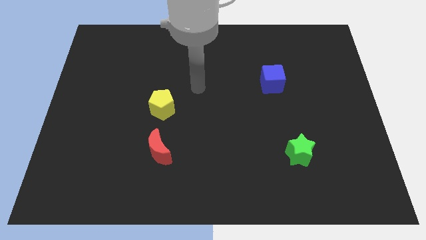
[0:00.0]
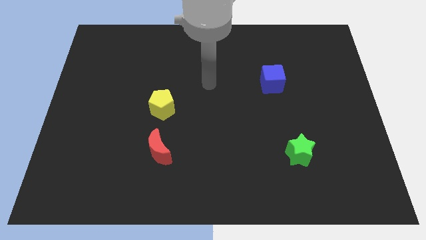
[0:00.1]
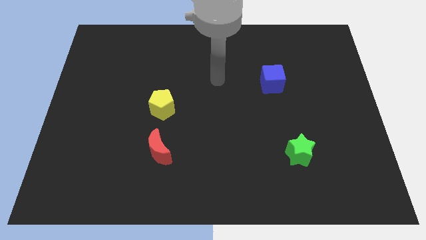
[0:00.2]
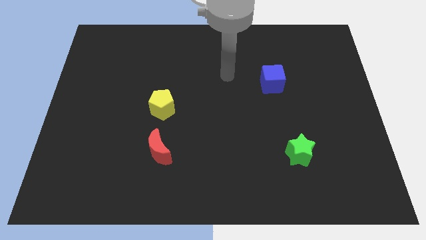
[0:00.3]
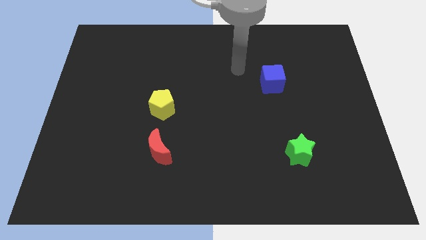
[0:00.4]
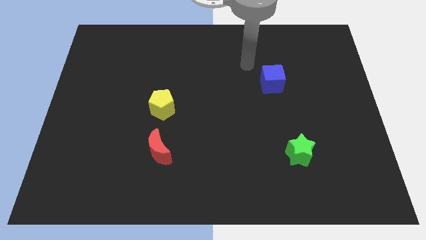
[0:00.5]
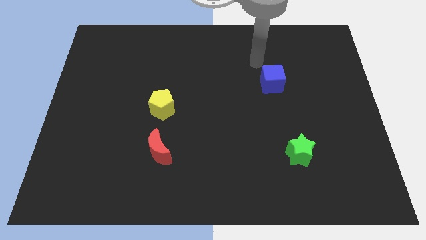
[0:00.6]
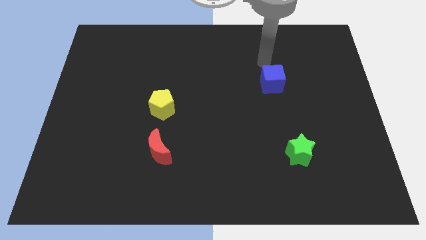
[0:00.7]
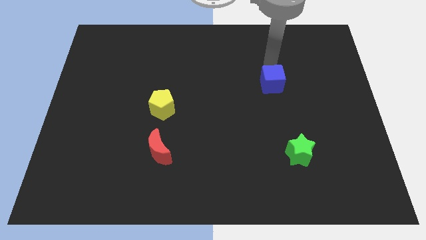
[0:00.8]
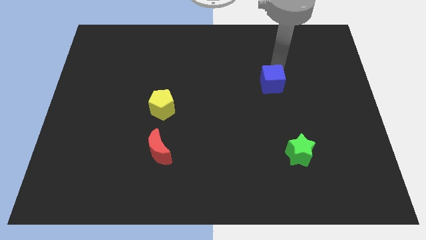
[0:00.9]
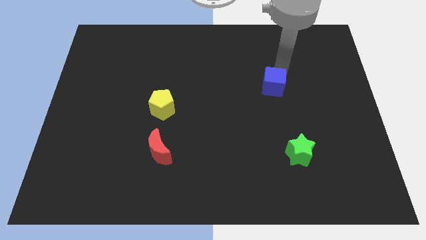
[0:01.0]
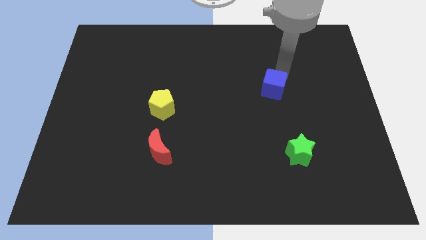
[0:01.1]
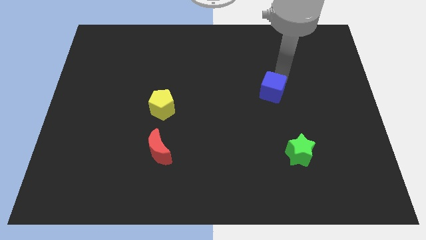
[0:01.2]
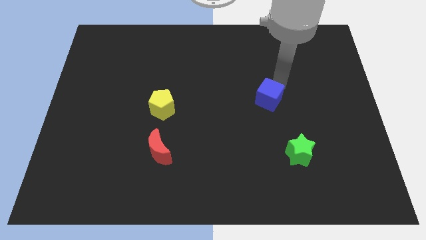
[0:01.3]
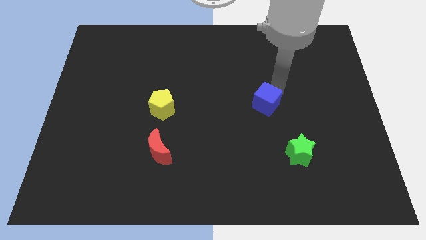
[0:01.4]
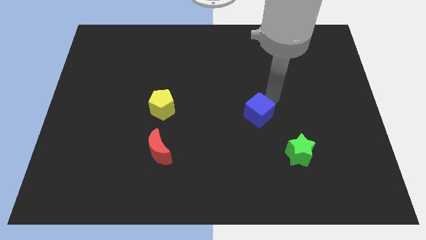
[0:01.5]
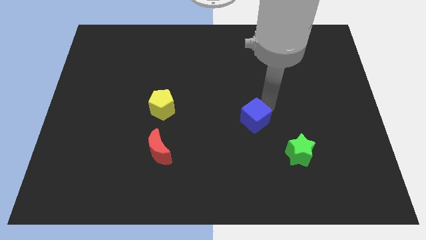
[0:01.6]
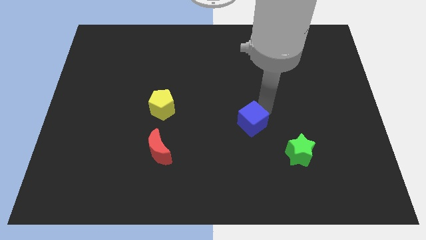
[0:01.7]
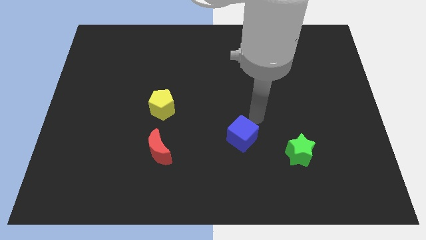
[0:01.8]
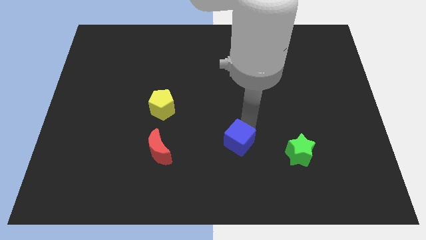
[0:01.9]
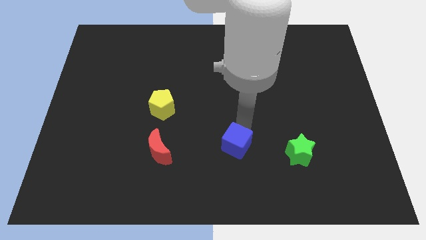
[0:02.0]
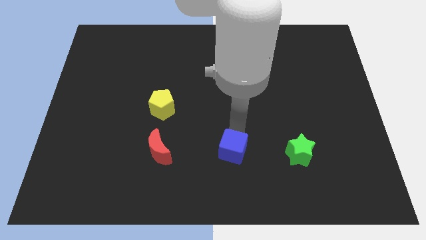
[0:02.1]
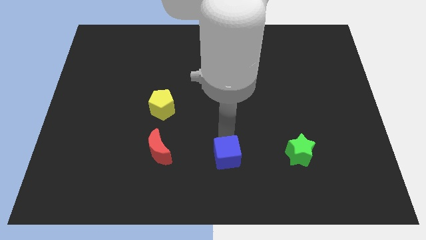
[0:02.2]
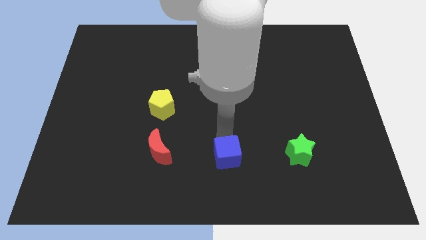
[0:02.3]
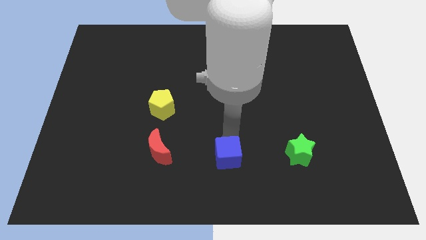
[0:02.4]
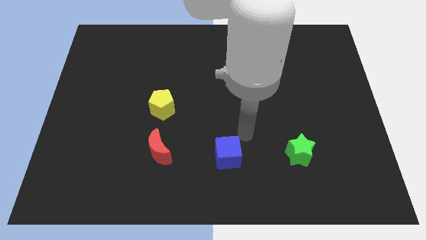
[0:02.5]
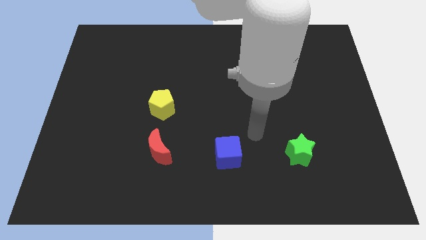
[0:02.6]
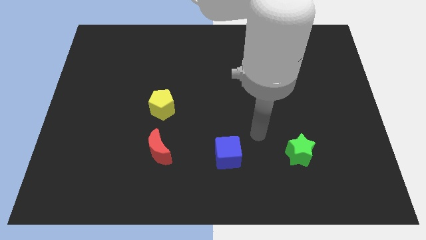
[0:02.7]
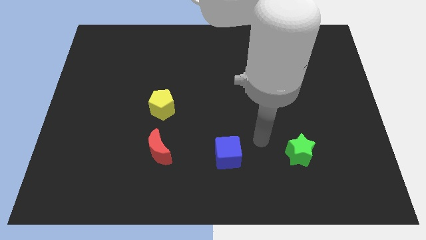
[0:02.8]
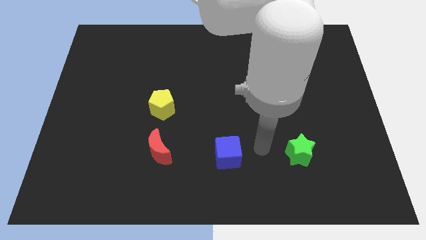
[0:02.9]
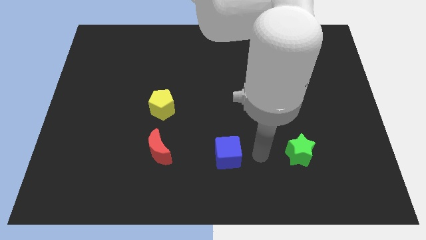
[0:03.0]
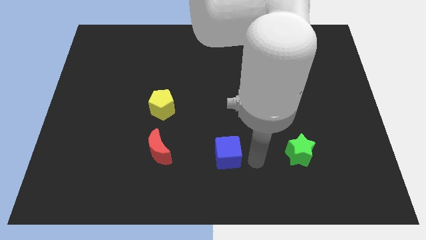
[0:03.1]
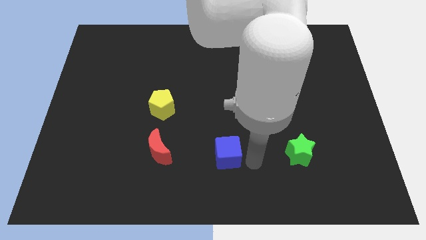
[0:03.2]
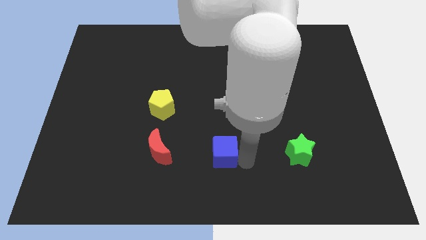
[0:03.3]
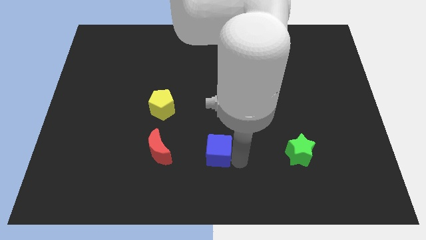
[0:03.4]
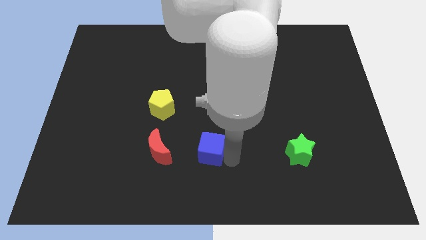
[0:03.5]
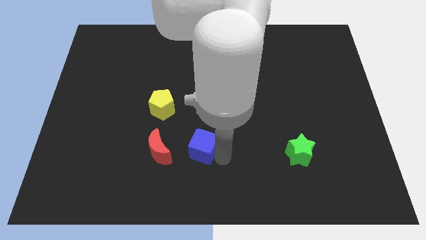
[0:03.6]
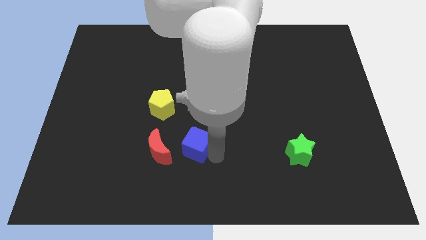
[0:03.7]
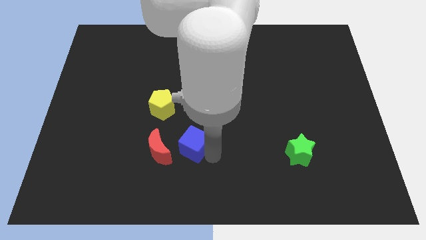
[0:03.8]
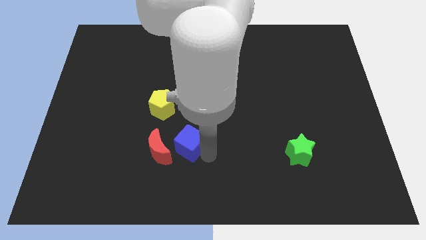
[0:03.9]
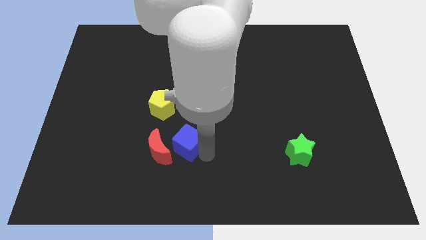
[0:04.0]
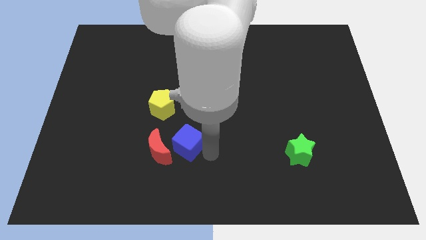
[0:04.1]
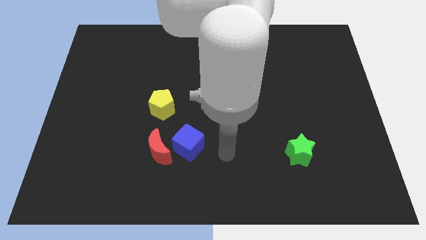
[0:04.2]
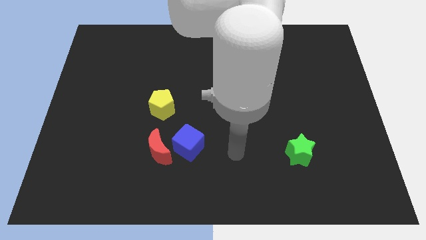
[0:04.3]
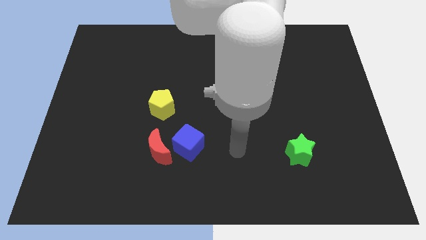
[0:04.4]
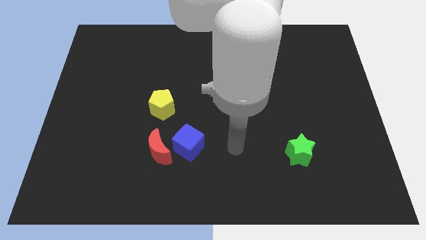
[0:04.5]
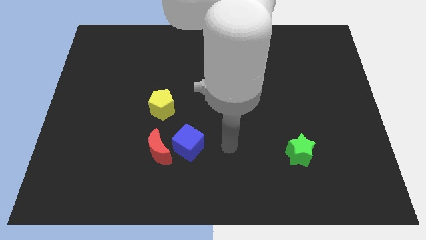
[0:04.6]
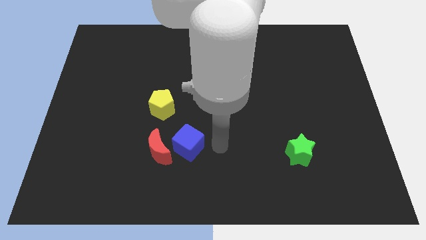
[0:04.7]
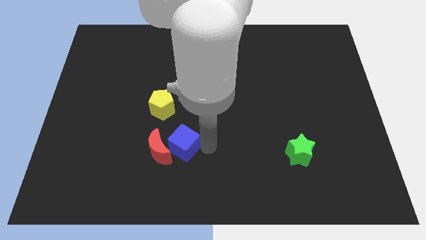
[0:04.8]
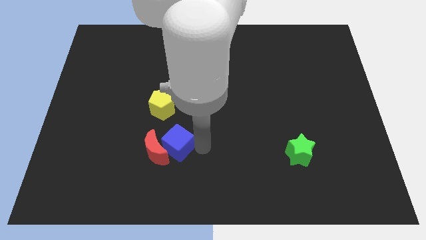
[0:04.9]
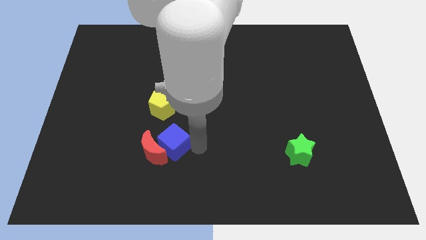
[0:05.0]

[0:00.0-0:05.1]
push the blue block towards the red block

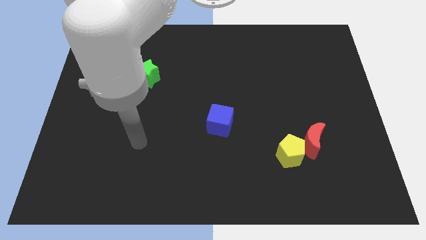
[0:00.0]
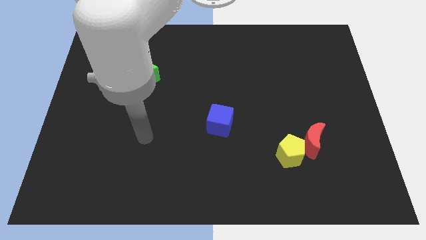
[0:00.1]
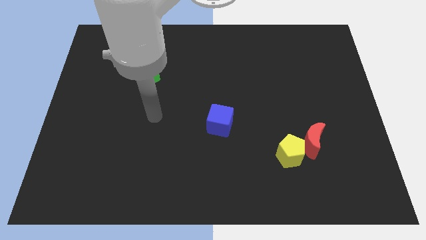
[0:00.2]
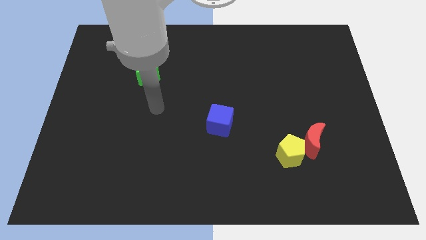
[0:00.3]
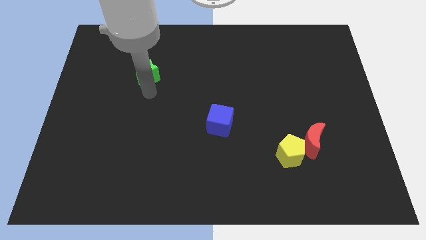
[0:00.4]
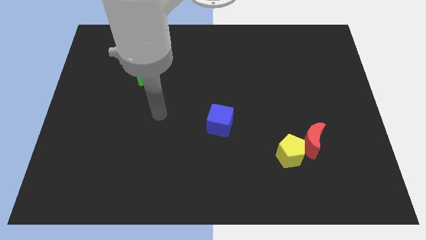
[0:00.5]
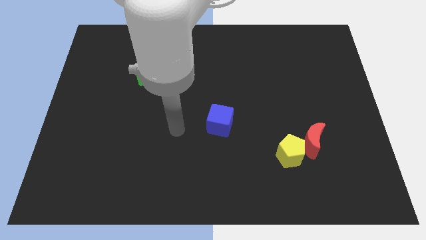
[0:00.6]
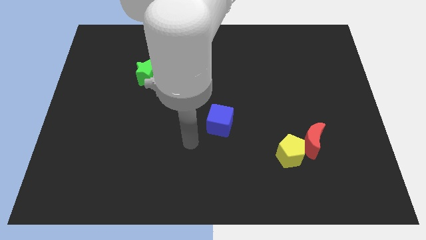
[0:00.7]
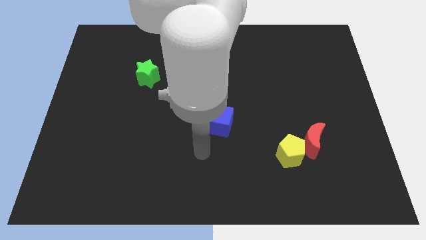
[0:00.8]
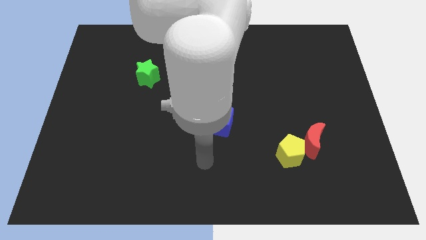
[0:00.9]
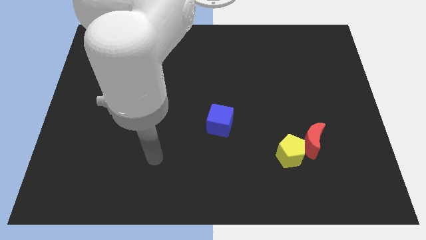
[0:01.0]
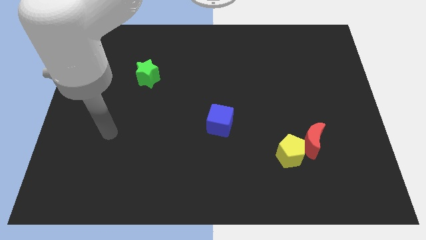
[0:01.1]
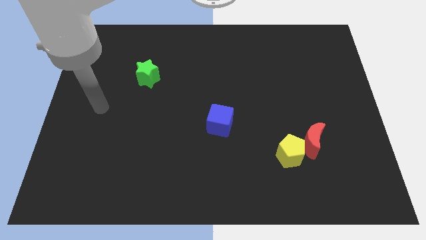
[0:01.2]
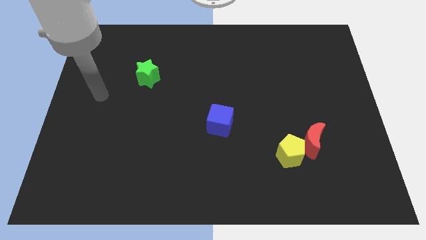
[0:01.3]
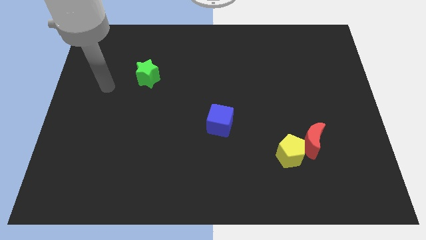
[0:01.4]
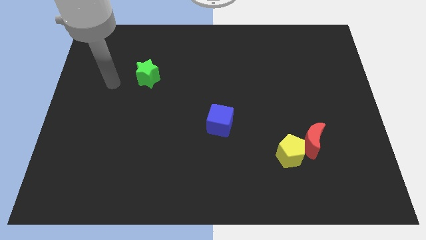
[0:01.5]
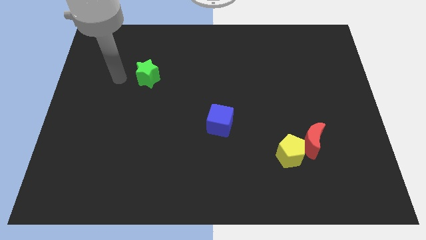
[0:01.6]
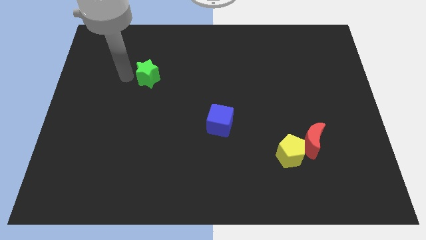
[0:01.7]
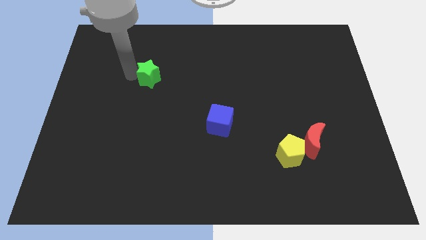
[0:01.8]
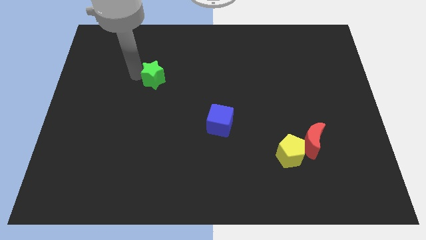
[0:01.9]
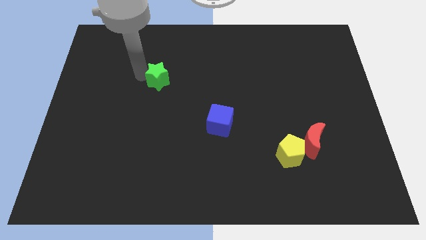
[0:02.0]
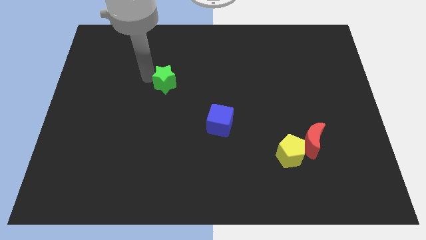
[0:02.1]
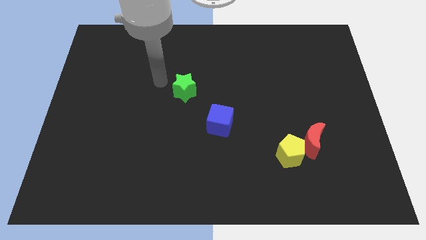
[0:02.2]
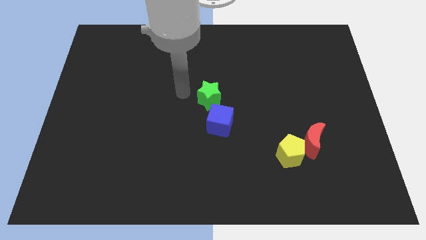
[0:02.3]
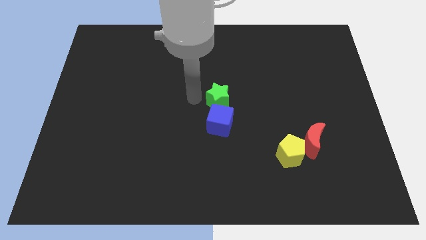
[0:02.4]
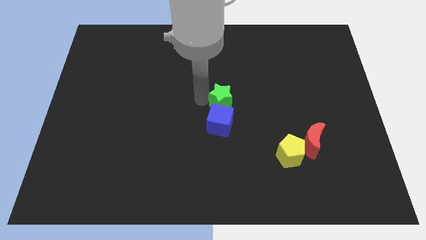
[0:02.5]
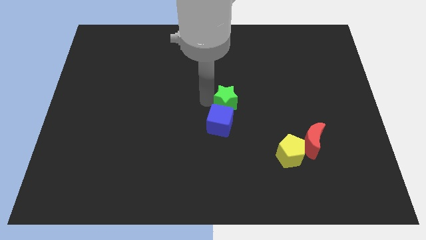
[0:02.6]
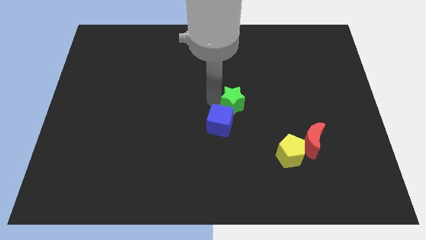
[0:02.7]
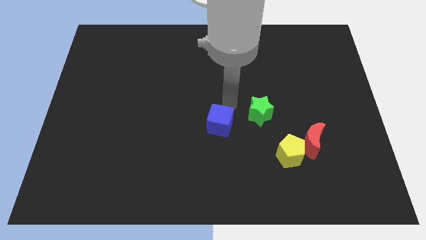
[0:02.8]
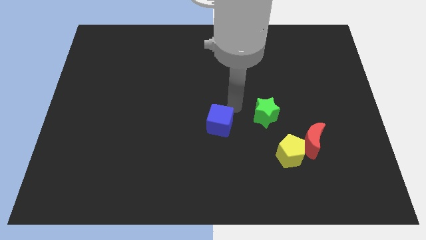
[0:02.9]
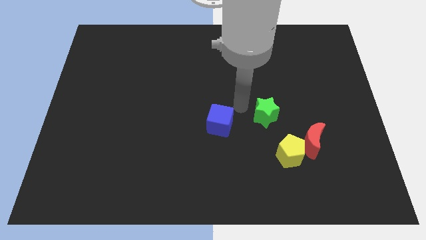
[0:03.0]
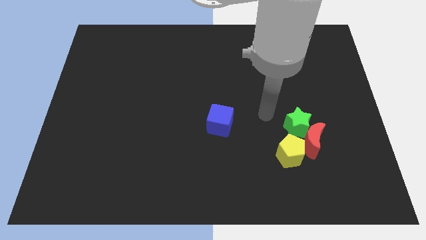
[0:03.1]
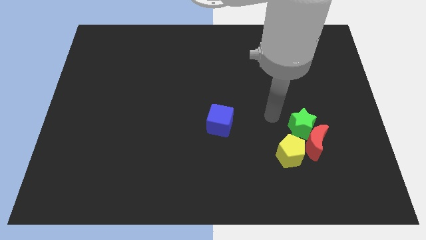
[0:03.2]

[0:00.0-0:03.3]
put the green star next to the red block

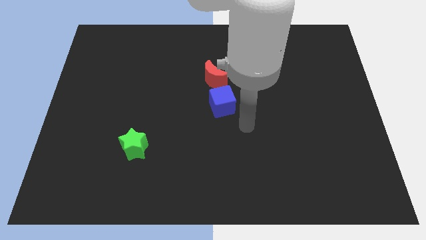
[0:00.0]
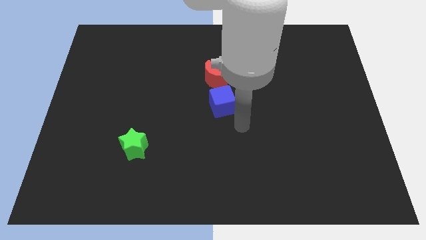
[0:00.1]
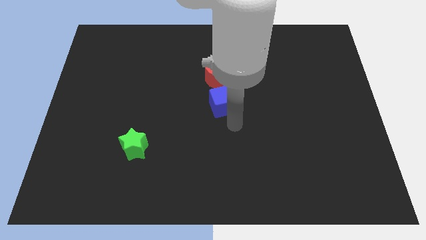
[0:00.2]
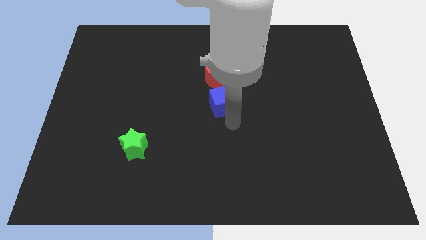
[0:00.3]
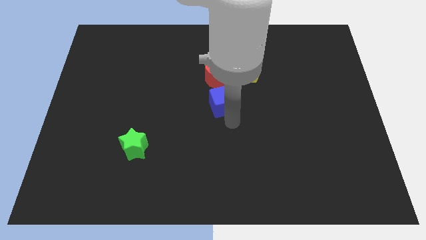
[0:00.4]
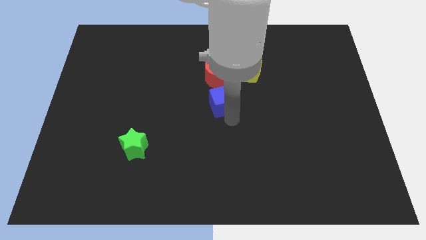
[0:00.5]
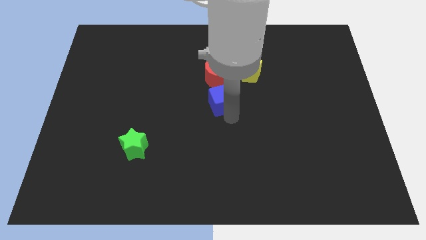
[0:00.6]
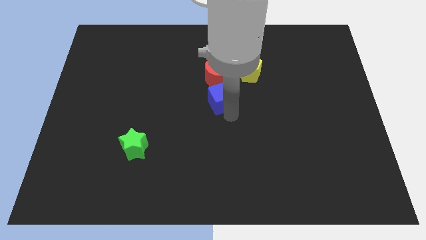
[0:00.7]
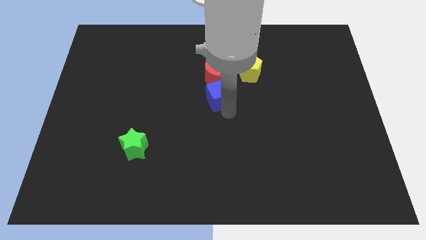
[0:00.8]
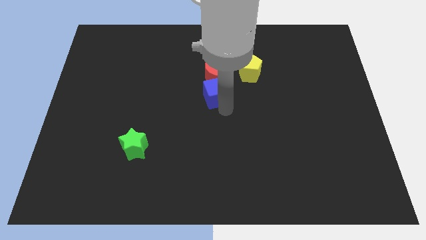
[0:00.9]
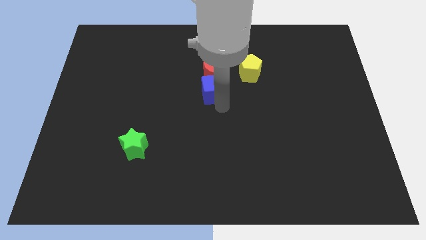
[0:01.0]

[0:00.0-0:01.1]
move the cube to the moon
